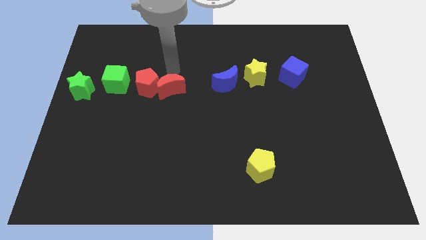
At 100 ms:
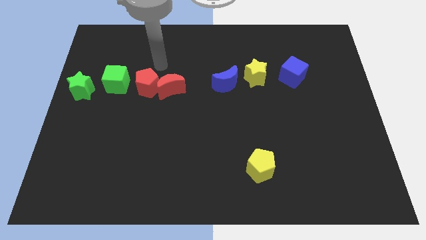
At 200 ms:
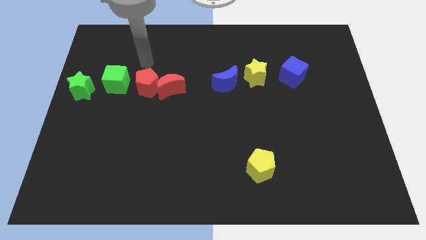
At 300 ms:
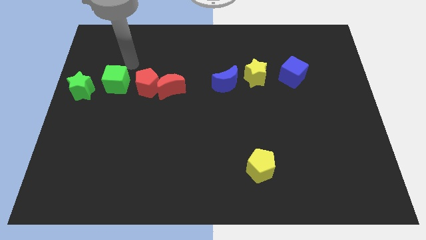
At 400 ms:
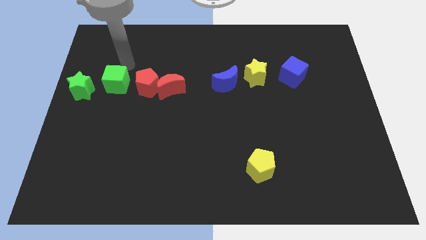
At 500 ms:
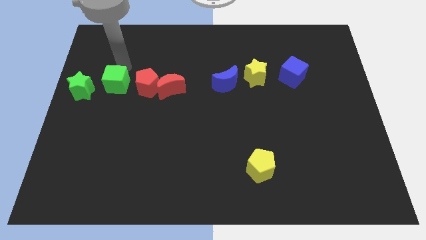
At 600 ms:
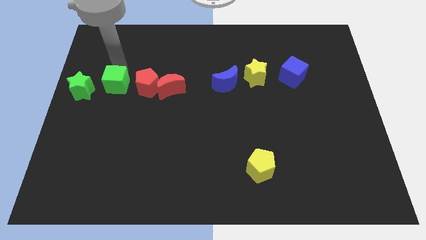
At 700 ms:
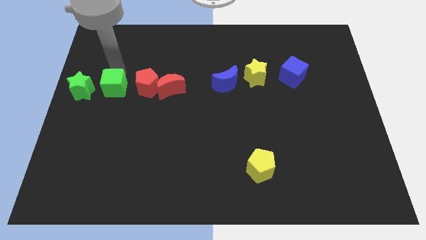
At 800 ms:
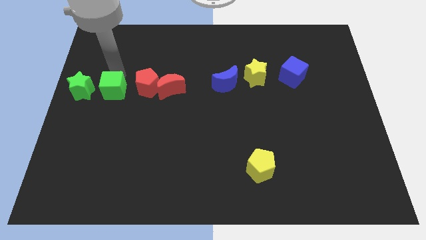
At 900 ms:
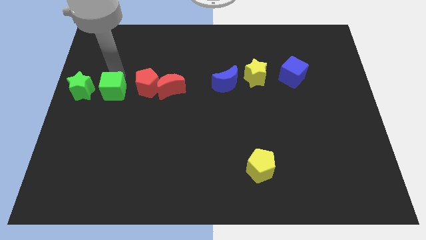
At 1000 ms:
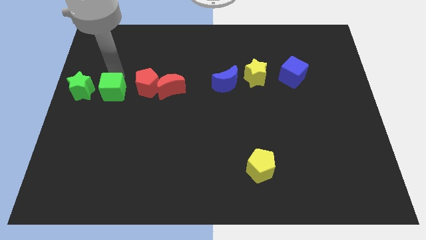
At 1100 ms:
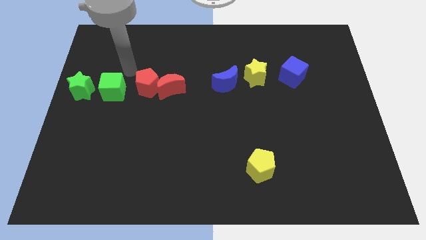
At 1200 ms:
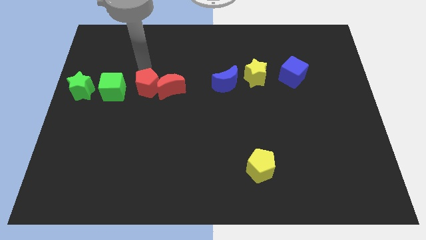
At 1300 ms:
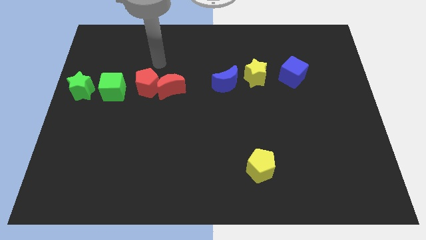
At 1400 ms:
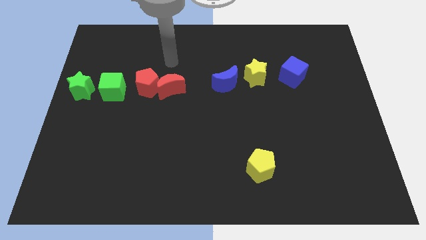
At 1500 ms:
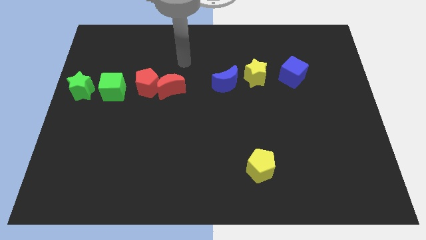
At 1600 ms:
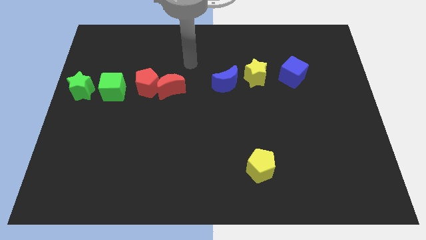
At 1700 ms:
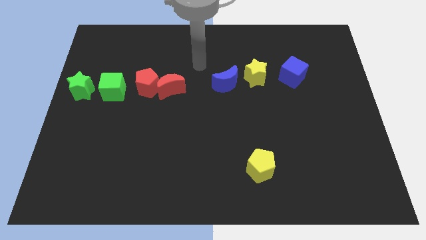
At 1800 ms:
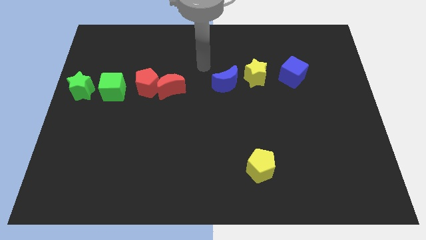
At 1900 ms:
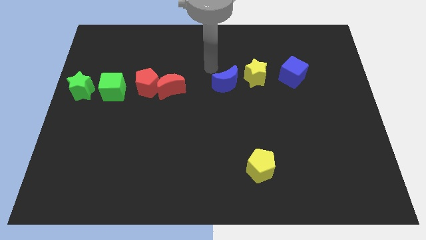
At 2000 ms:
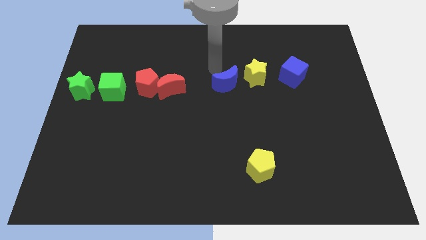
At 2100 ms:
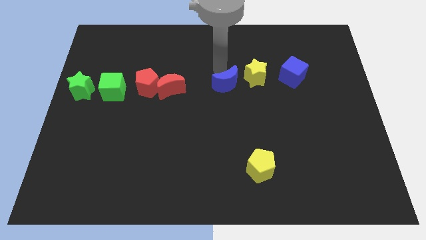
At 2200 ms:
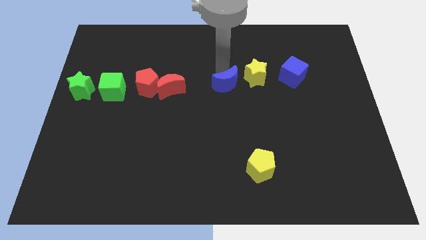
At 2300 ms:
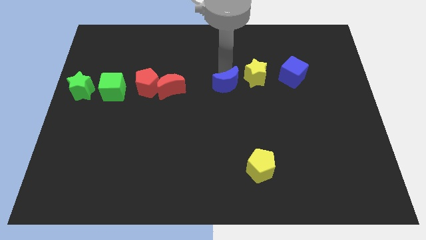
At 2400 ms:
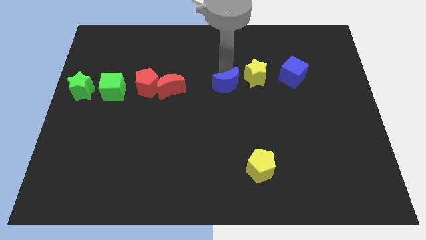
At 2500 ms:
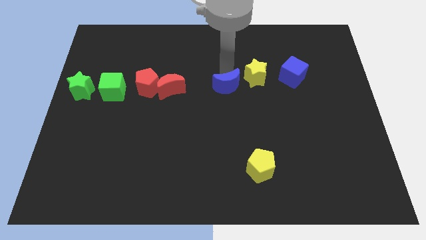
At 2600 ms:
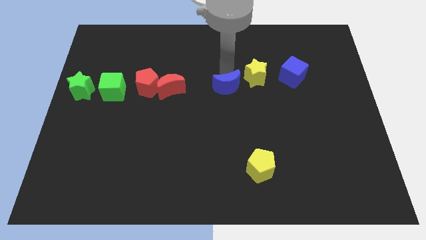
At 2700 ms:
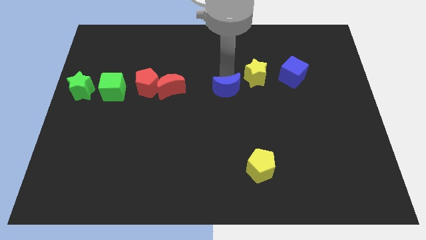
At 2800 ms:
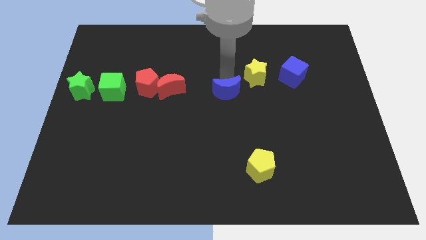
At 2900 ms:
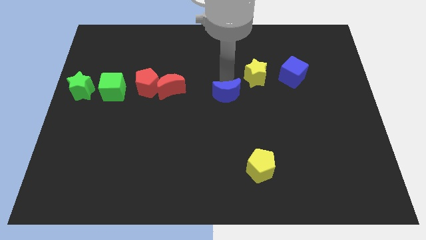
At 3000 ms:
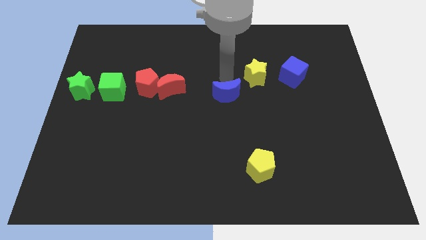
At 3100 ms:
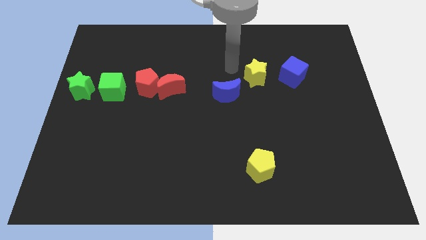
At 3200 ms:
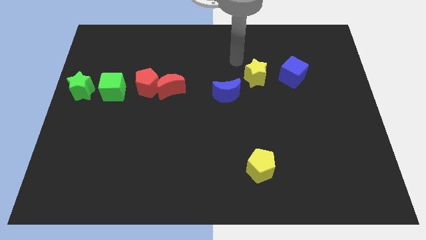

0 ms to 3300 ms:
adjust the green cube and the blue crescent to form a horizontal line with group of blocks

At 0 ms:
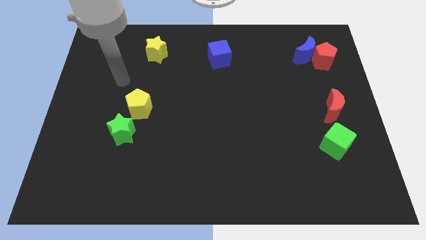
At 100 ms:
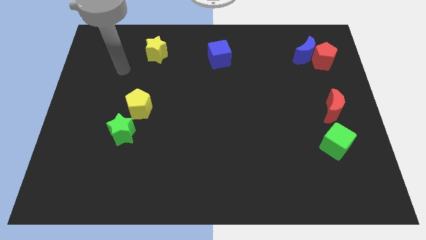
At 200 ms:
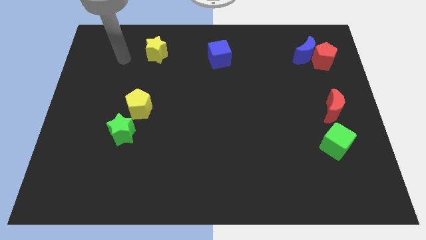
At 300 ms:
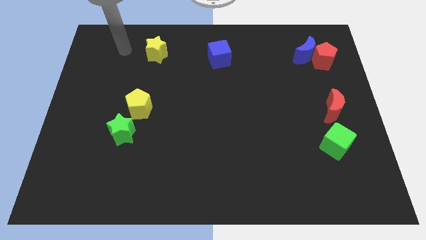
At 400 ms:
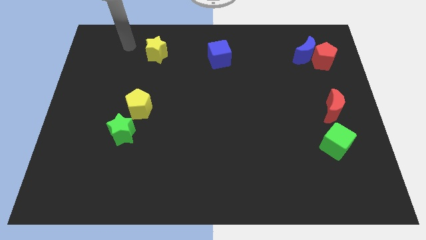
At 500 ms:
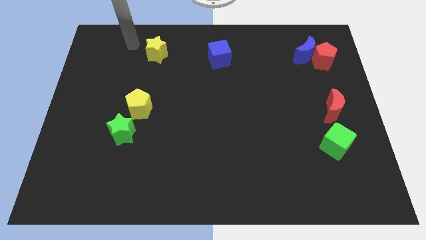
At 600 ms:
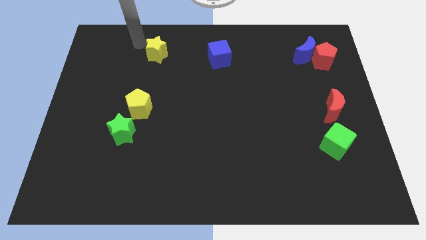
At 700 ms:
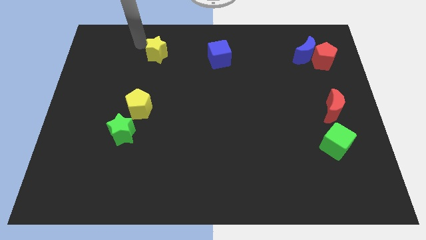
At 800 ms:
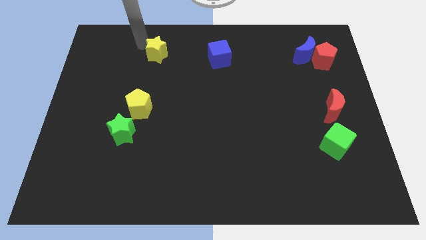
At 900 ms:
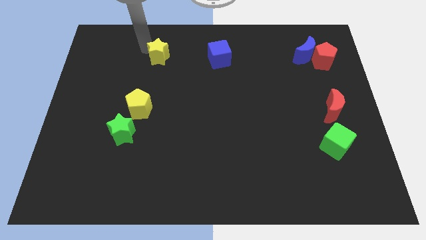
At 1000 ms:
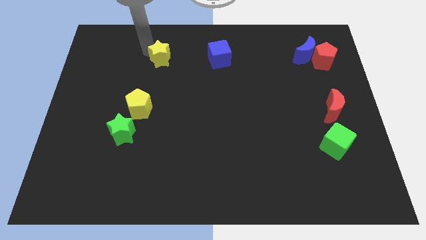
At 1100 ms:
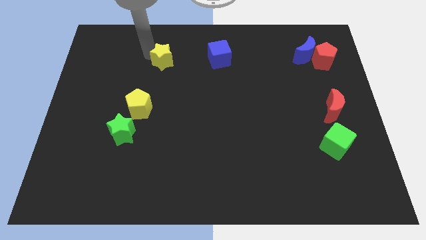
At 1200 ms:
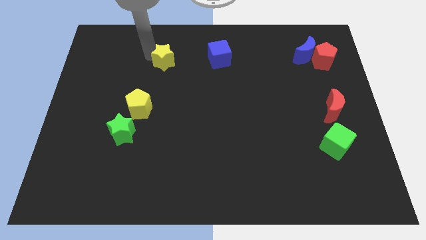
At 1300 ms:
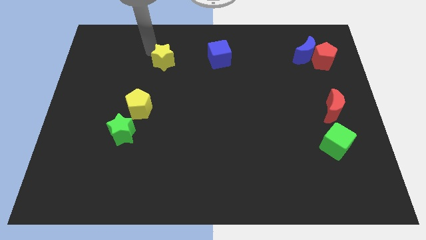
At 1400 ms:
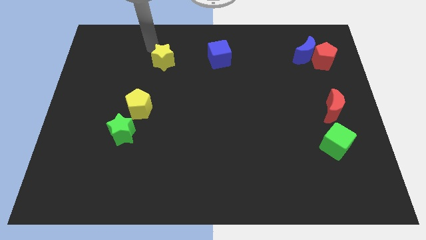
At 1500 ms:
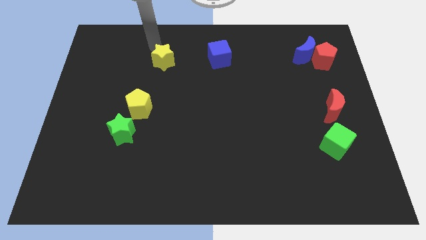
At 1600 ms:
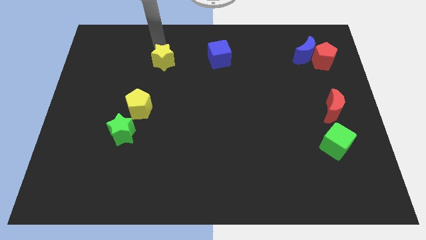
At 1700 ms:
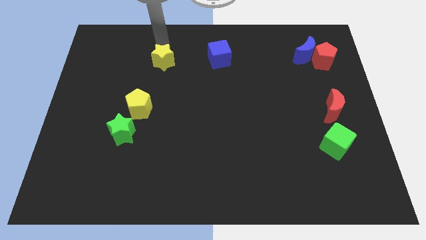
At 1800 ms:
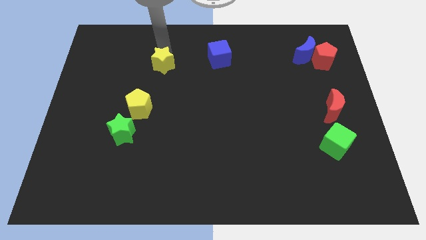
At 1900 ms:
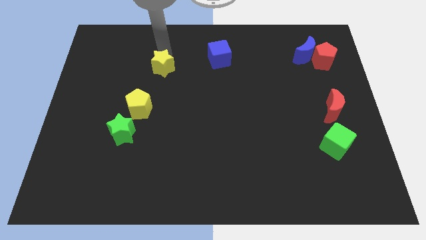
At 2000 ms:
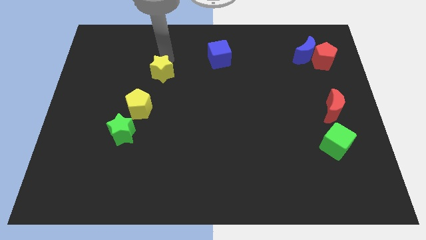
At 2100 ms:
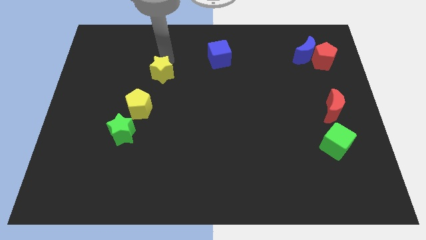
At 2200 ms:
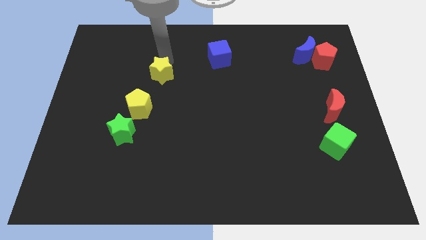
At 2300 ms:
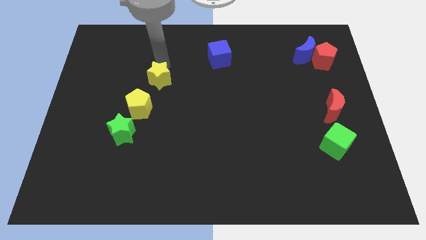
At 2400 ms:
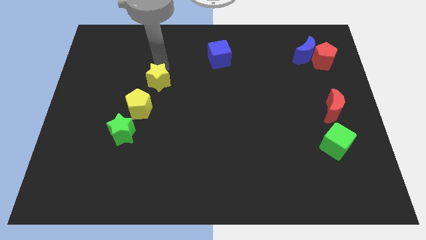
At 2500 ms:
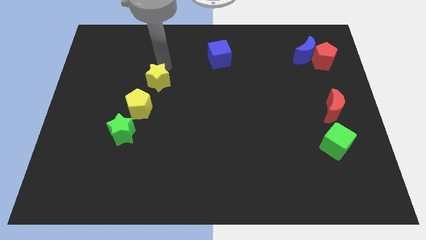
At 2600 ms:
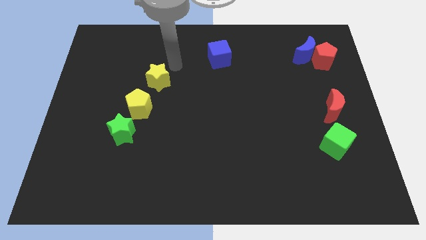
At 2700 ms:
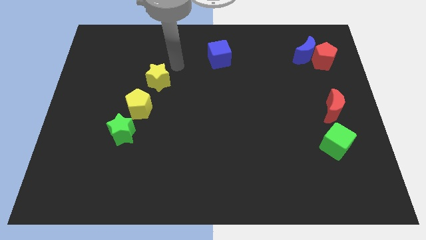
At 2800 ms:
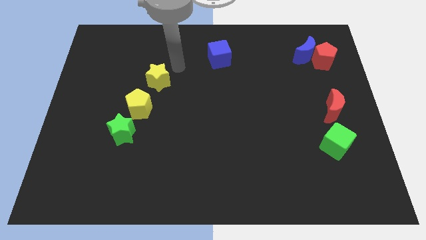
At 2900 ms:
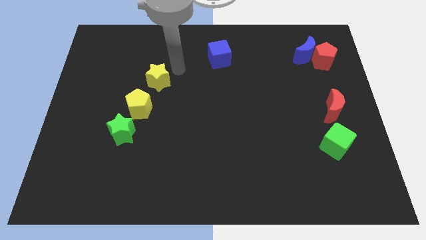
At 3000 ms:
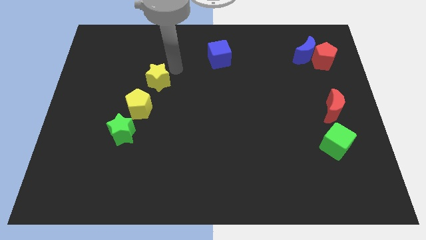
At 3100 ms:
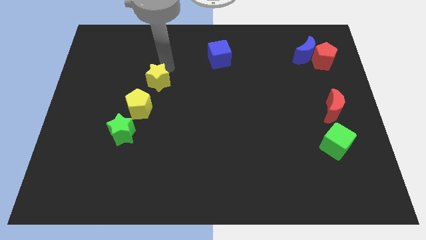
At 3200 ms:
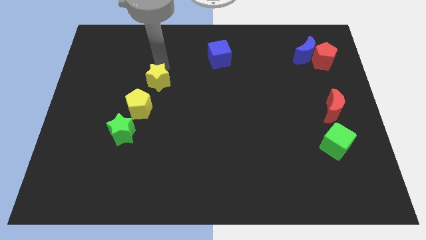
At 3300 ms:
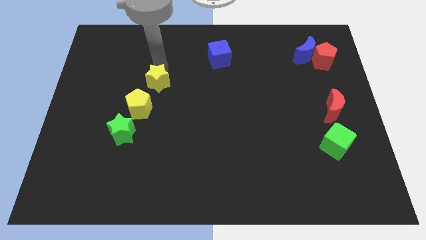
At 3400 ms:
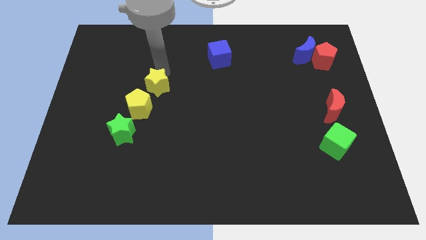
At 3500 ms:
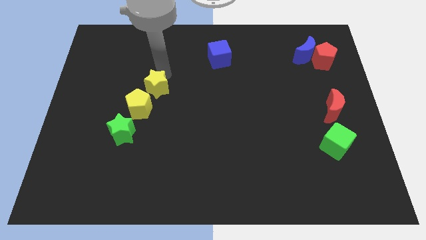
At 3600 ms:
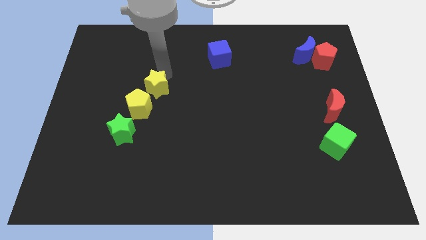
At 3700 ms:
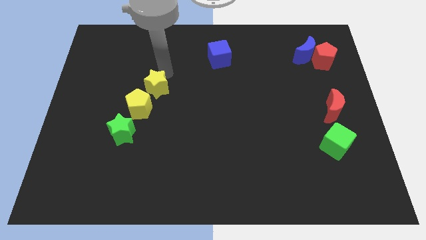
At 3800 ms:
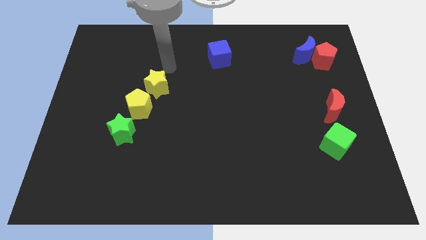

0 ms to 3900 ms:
move the yellow star above the yellow pentagon

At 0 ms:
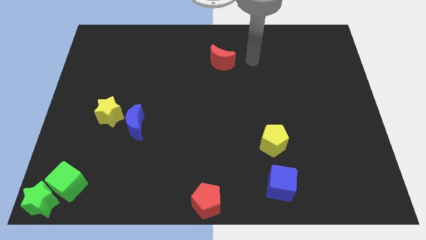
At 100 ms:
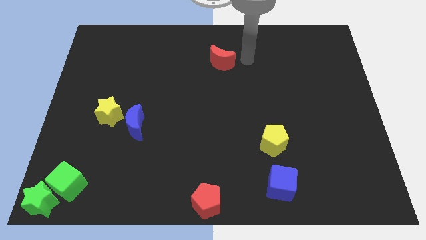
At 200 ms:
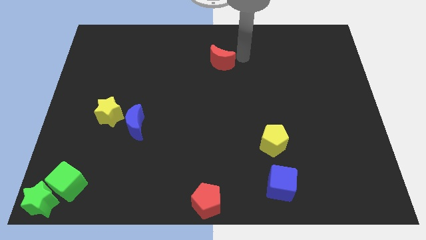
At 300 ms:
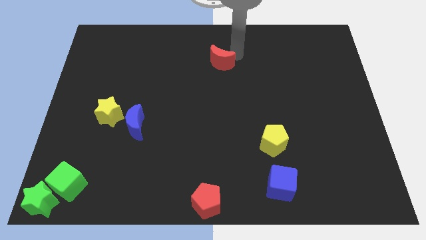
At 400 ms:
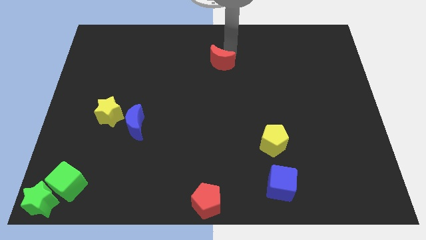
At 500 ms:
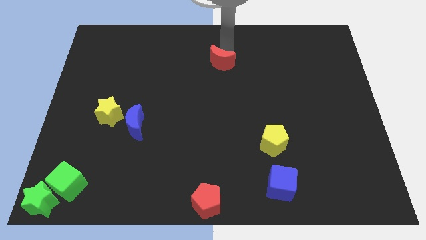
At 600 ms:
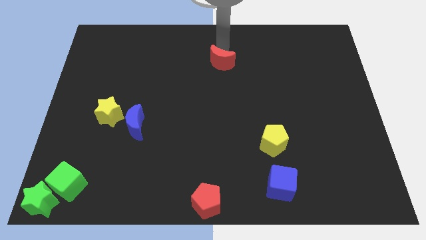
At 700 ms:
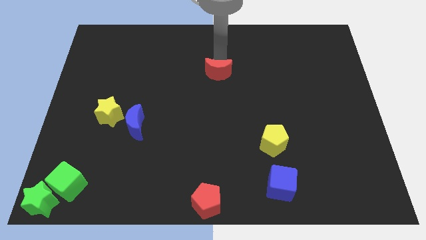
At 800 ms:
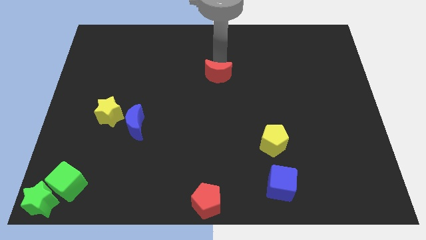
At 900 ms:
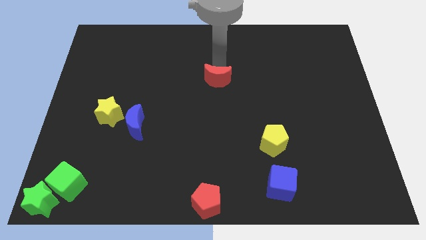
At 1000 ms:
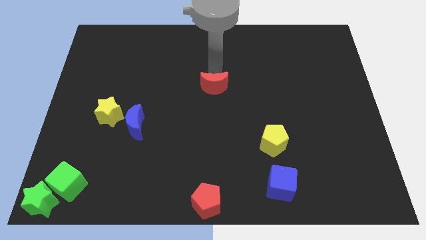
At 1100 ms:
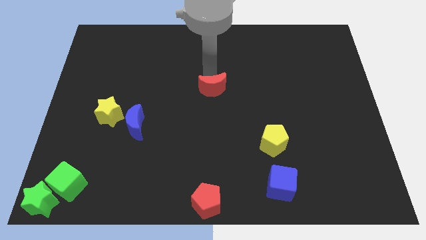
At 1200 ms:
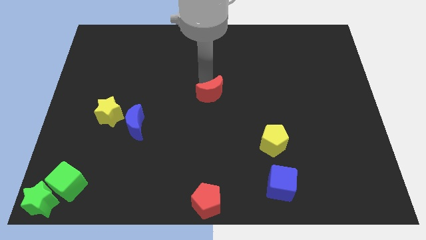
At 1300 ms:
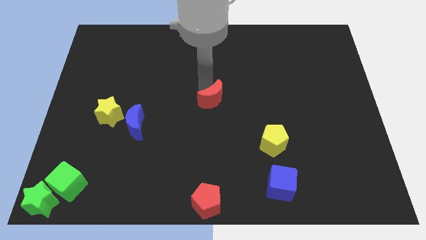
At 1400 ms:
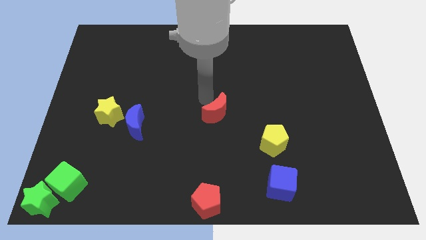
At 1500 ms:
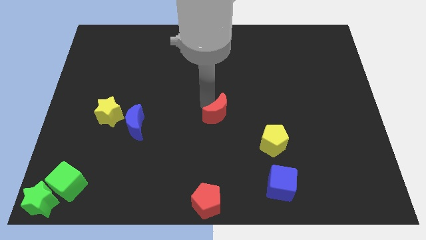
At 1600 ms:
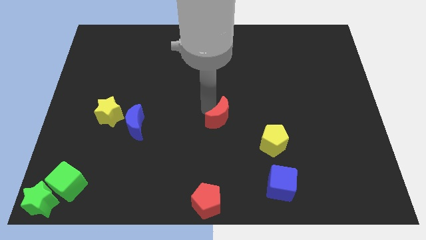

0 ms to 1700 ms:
move the red crescent to the center of the board
